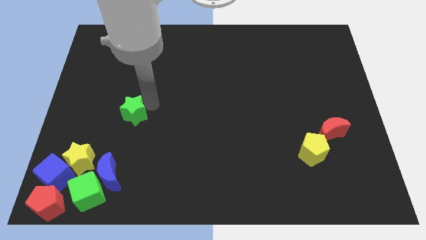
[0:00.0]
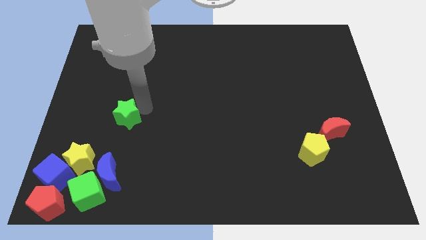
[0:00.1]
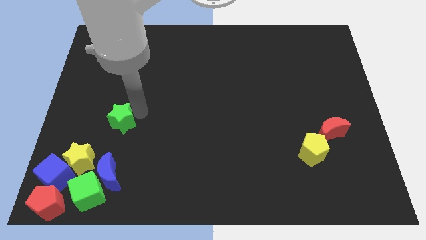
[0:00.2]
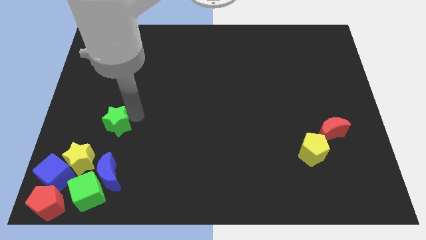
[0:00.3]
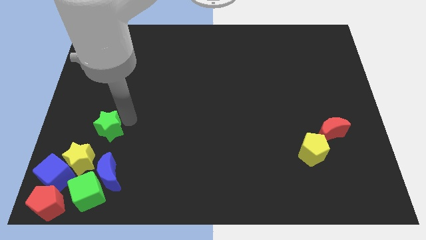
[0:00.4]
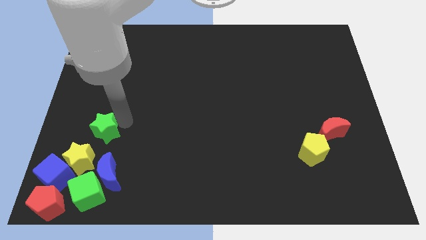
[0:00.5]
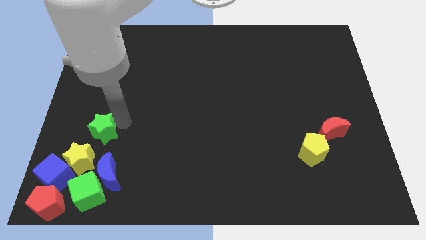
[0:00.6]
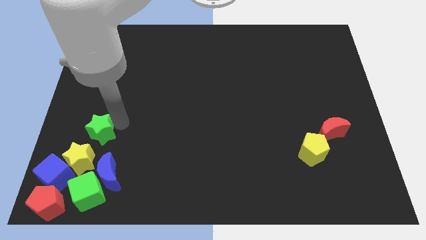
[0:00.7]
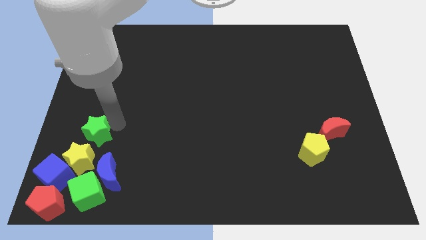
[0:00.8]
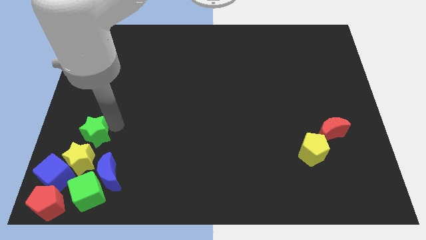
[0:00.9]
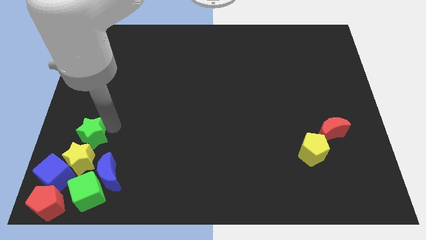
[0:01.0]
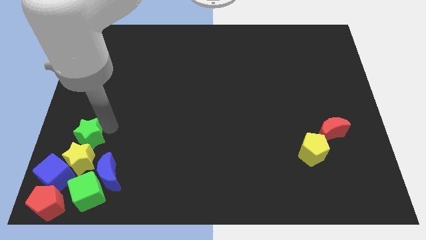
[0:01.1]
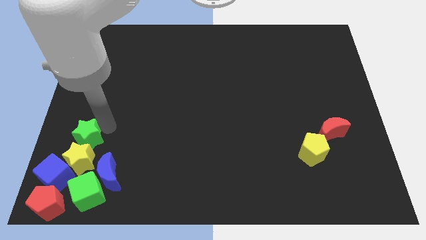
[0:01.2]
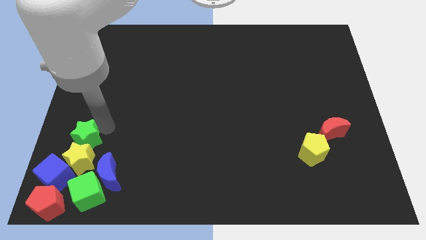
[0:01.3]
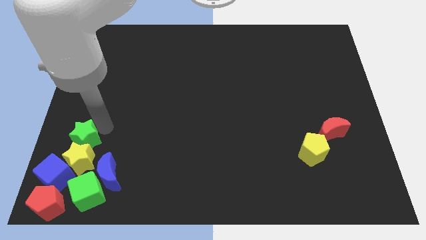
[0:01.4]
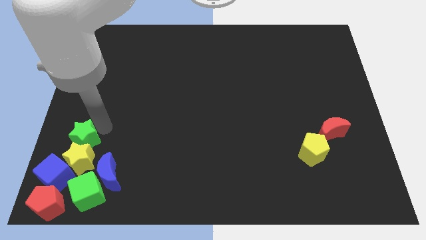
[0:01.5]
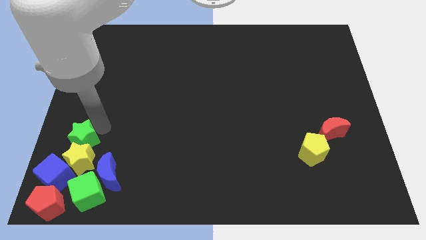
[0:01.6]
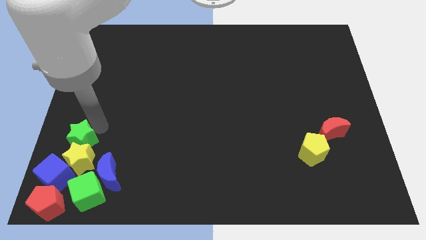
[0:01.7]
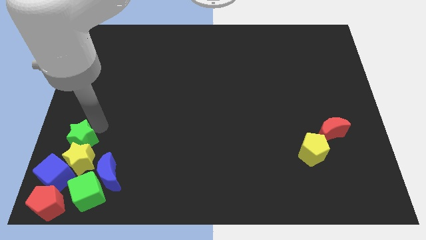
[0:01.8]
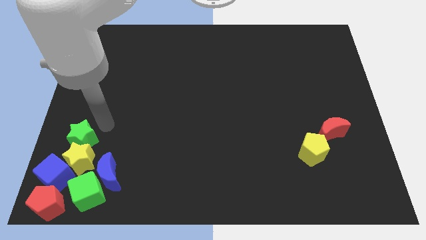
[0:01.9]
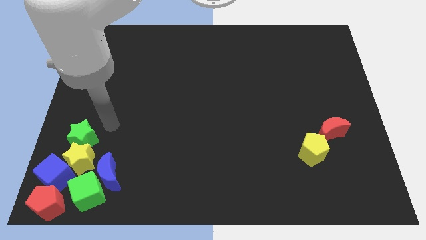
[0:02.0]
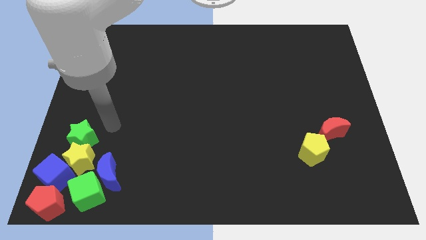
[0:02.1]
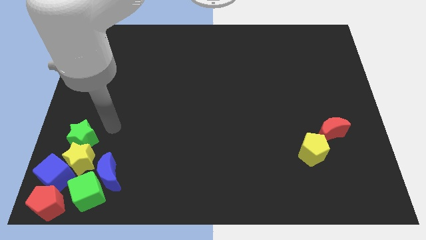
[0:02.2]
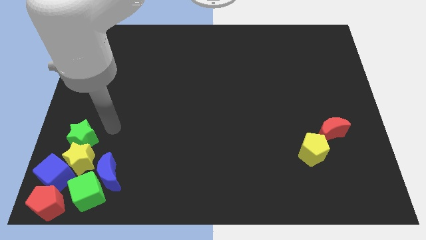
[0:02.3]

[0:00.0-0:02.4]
push the green star into the left bottom of the yellow pentagon

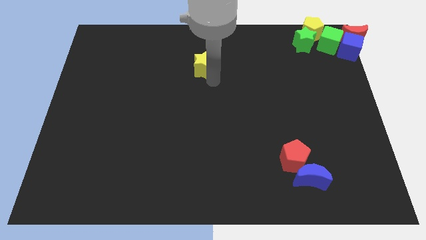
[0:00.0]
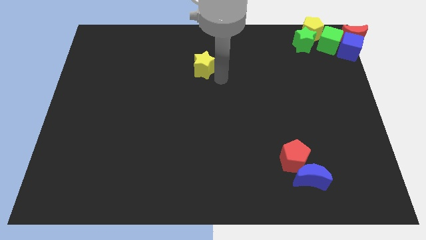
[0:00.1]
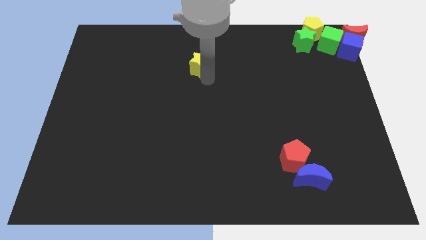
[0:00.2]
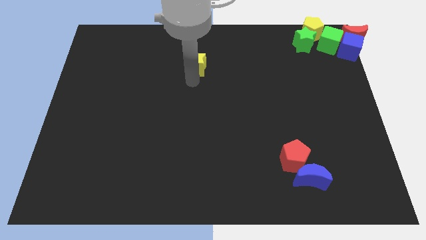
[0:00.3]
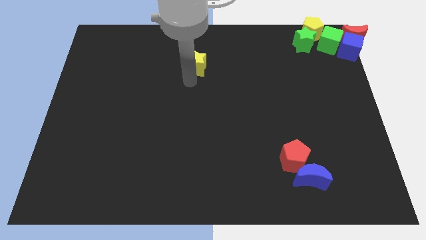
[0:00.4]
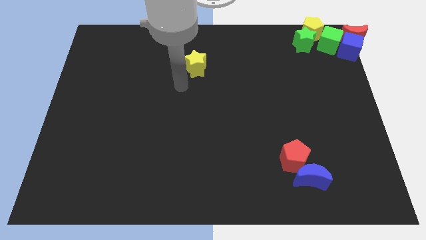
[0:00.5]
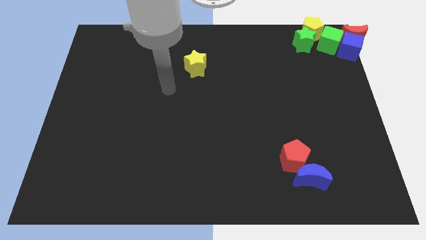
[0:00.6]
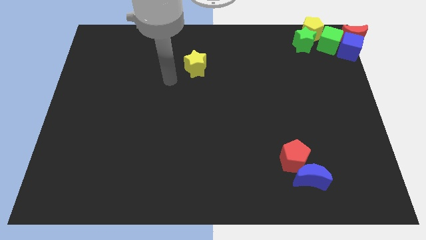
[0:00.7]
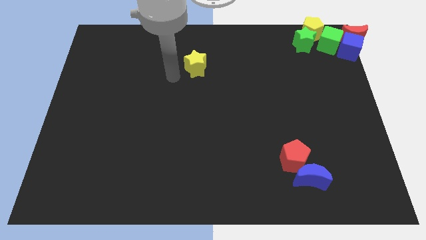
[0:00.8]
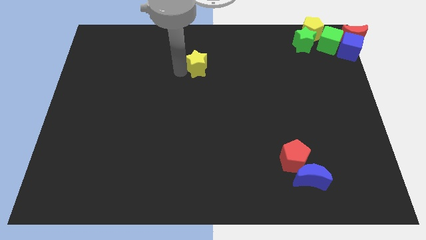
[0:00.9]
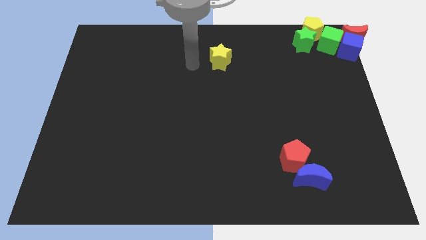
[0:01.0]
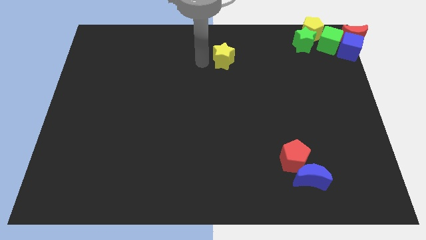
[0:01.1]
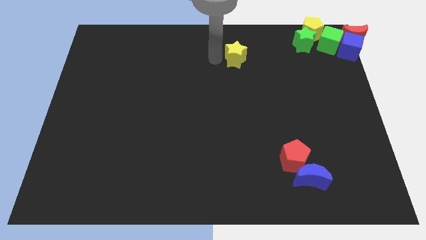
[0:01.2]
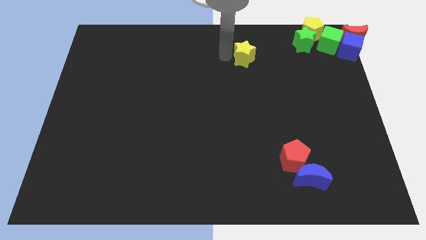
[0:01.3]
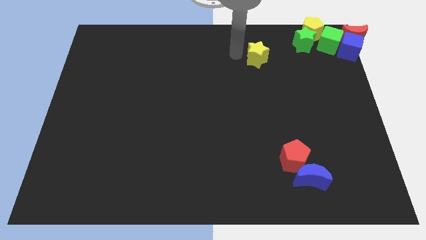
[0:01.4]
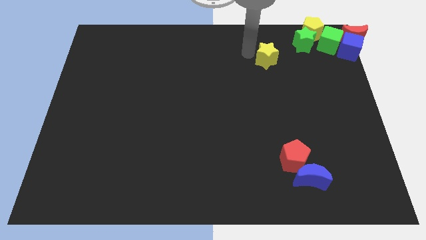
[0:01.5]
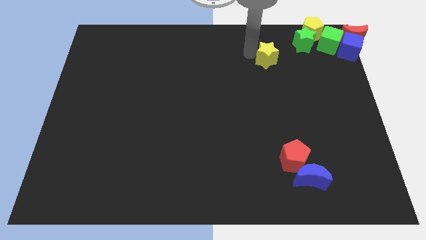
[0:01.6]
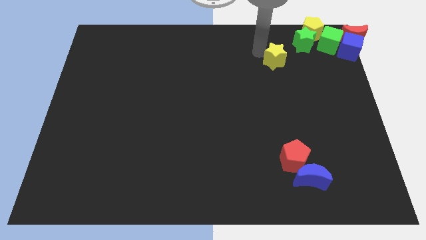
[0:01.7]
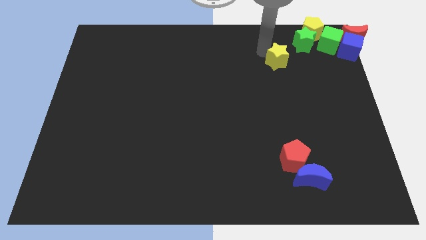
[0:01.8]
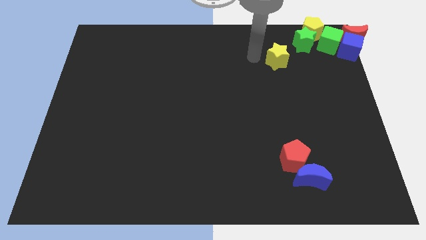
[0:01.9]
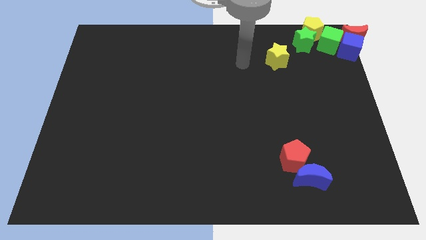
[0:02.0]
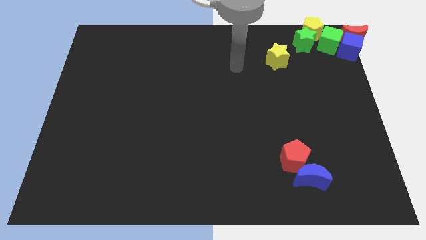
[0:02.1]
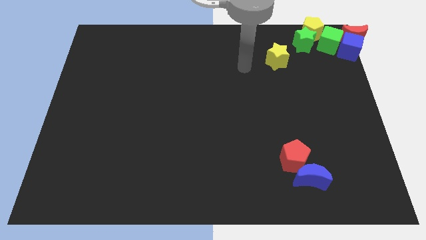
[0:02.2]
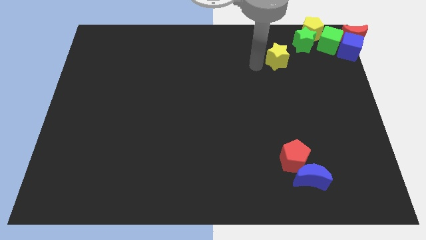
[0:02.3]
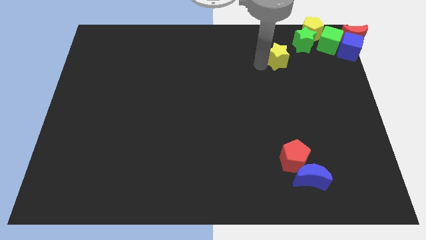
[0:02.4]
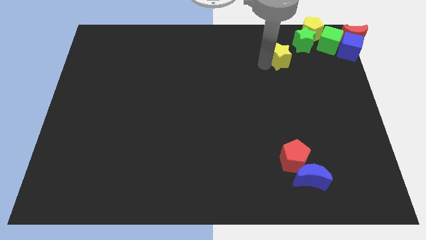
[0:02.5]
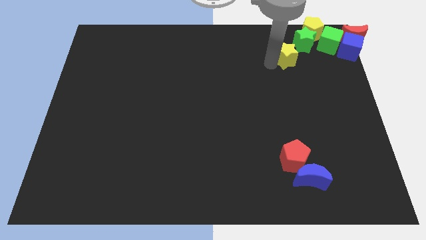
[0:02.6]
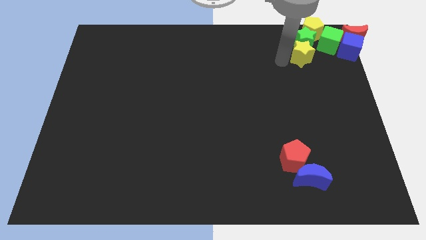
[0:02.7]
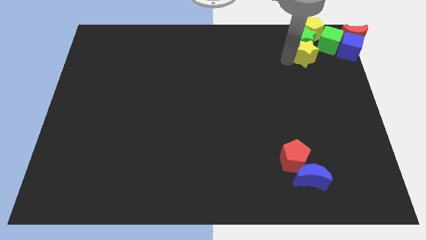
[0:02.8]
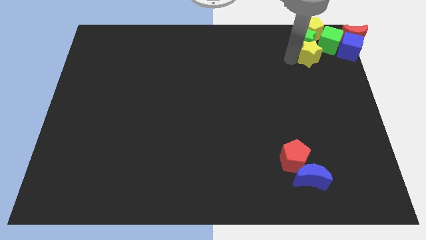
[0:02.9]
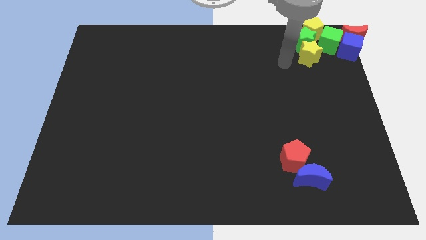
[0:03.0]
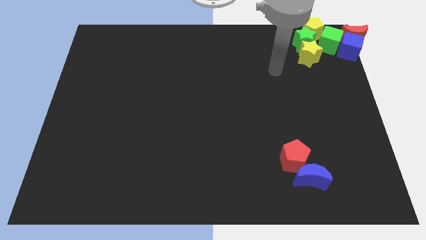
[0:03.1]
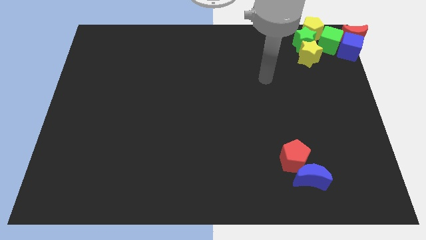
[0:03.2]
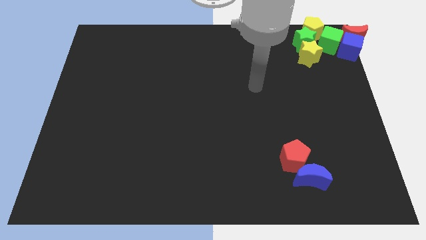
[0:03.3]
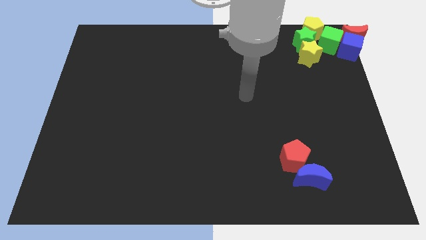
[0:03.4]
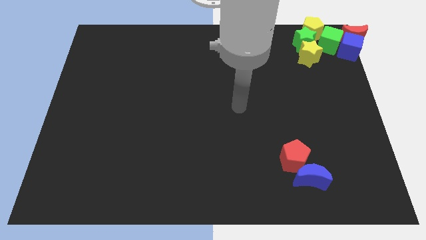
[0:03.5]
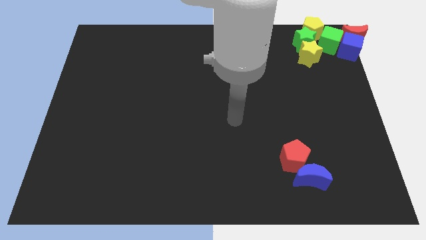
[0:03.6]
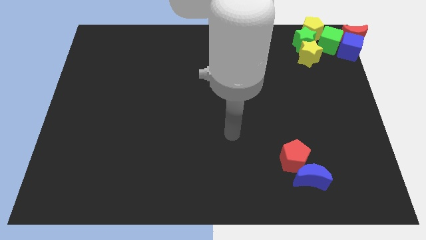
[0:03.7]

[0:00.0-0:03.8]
move the yellow star to the bottom of the green star

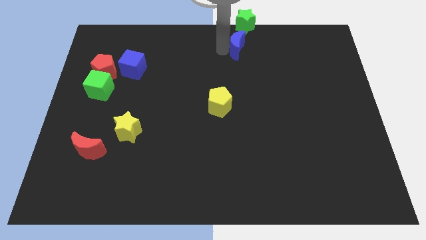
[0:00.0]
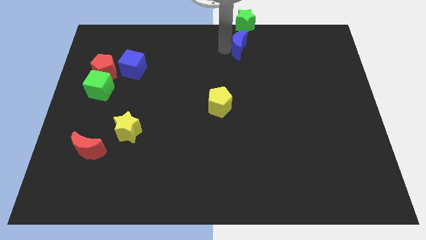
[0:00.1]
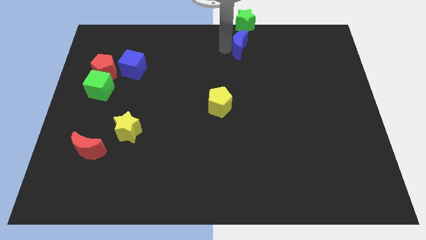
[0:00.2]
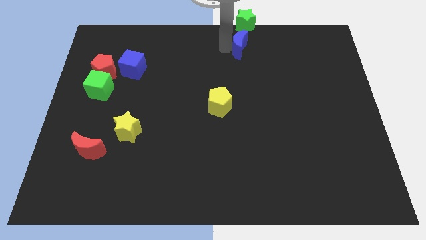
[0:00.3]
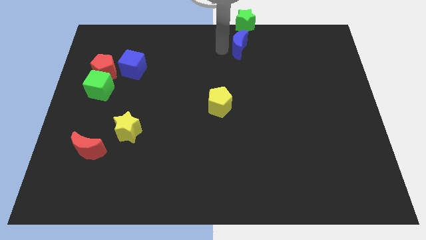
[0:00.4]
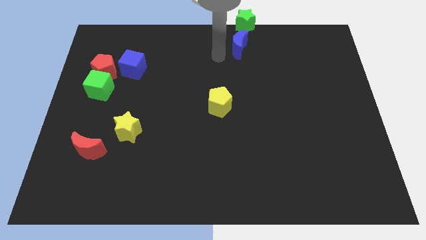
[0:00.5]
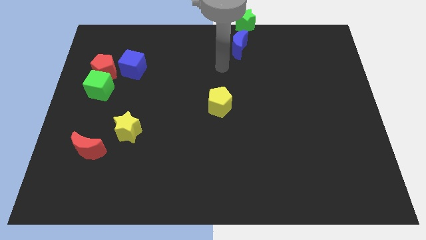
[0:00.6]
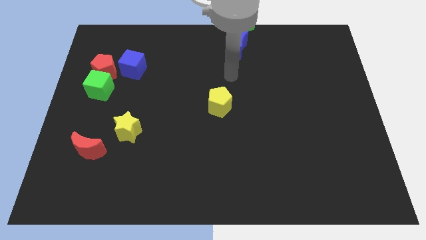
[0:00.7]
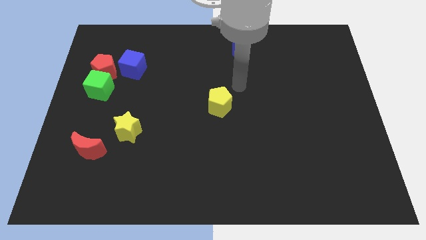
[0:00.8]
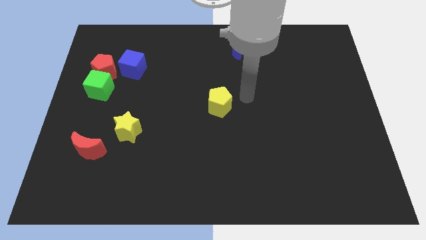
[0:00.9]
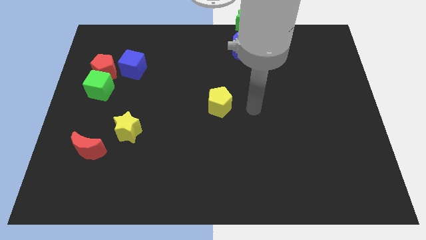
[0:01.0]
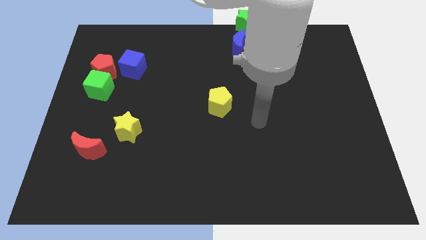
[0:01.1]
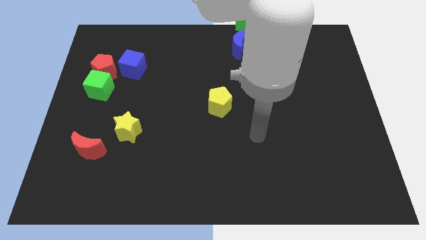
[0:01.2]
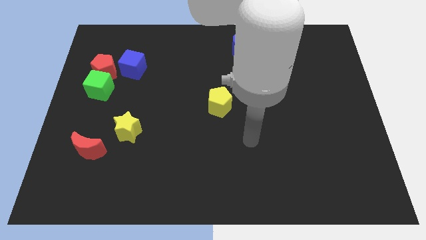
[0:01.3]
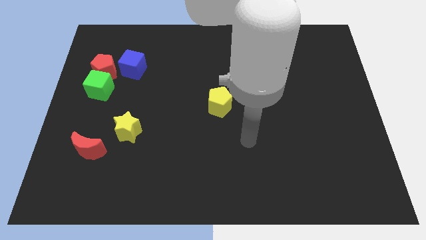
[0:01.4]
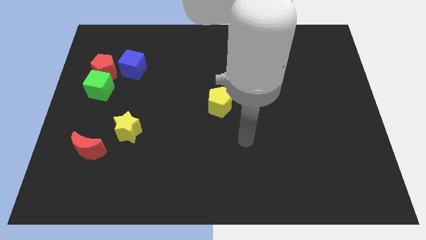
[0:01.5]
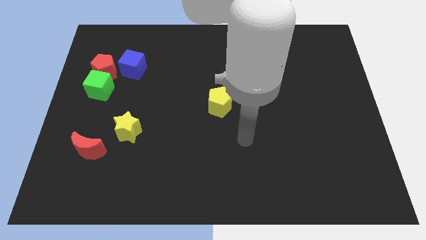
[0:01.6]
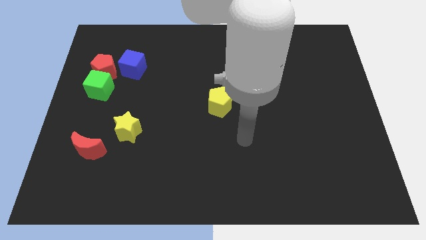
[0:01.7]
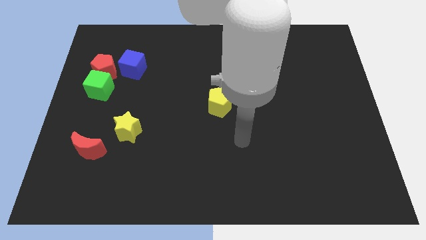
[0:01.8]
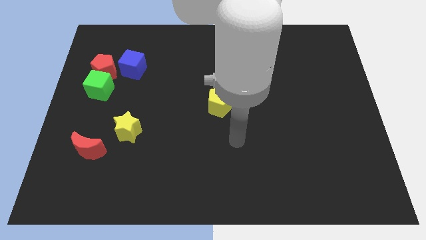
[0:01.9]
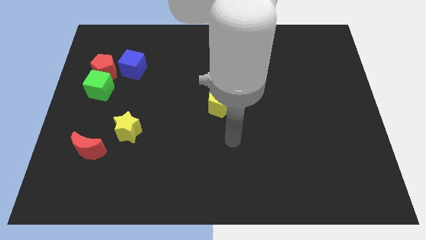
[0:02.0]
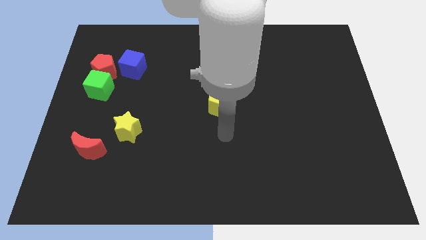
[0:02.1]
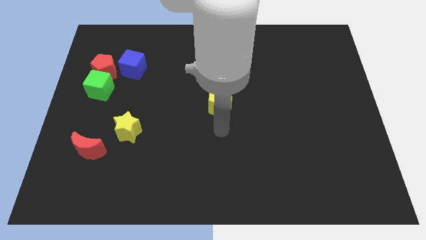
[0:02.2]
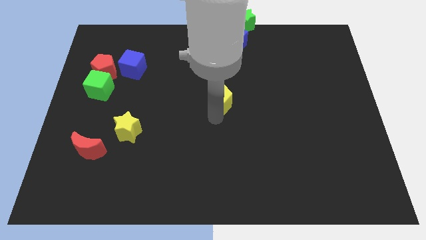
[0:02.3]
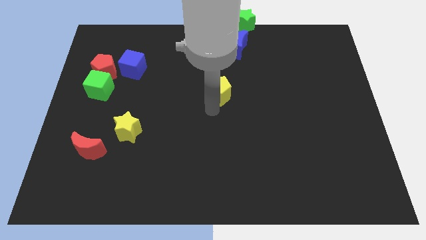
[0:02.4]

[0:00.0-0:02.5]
place the arm below the yellow pentagon
